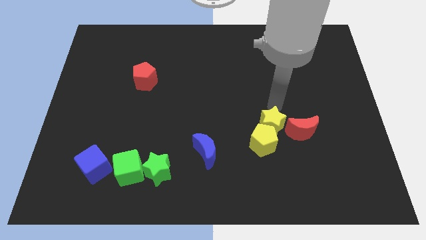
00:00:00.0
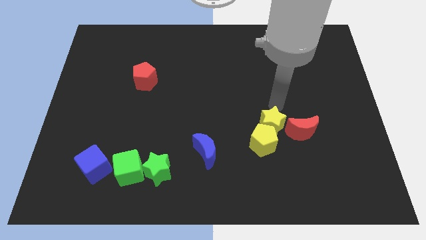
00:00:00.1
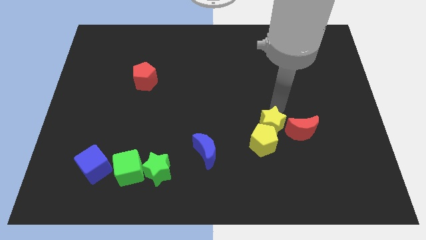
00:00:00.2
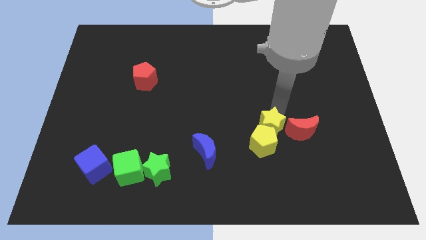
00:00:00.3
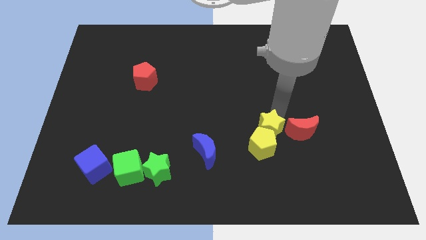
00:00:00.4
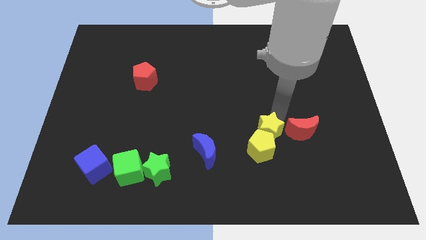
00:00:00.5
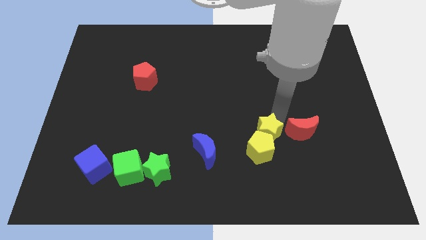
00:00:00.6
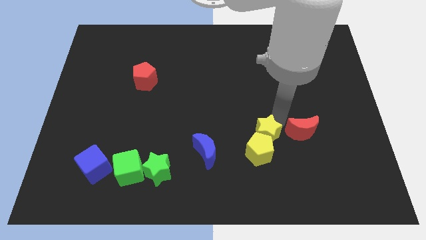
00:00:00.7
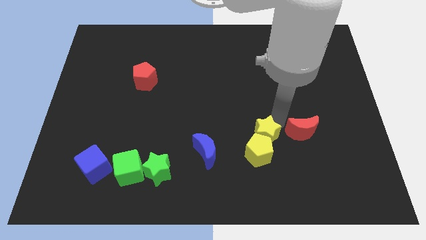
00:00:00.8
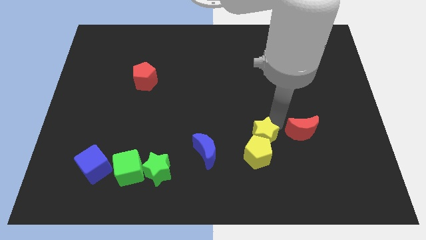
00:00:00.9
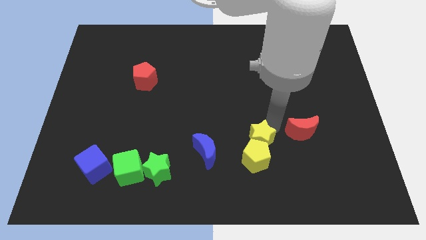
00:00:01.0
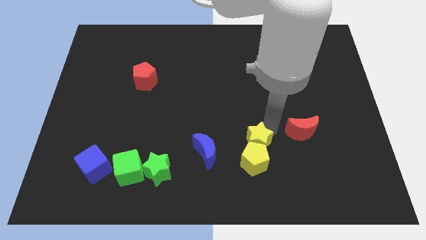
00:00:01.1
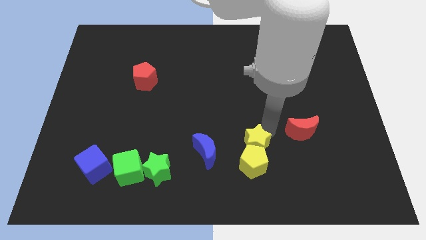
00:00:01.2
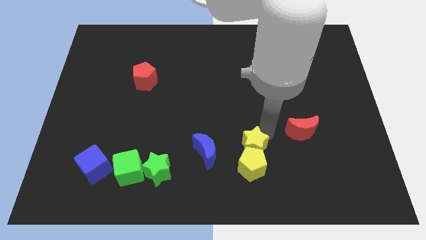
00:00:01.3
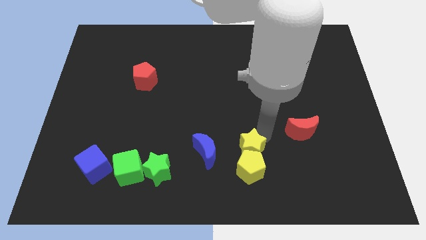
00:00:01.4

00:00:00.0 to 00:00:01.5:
move the group of yellow blocks at the right side of the blue moon

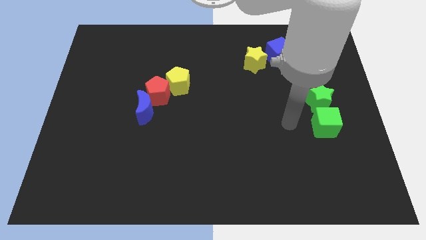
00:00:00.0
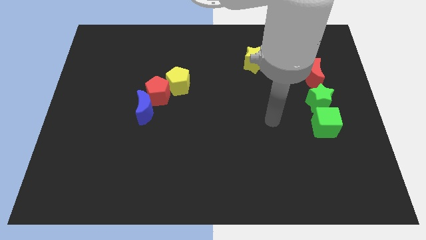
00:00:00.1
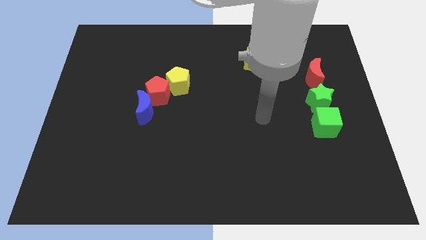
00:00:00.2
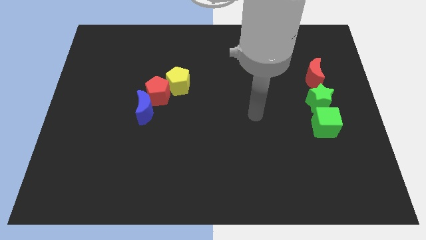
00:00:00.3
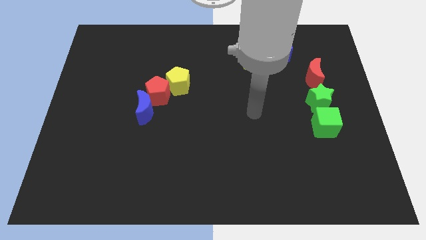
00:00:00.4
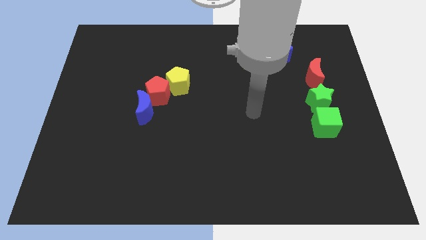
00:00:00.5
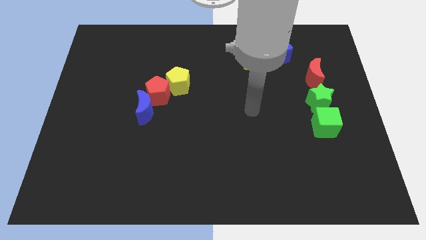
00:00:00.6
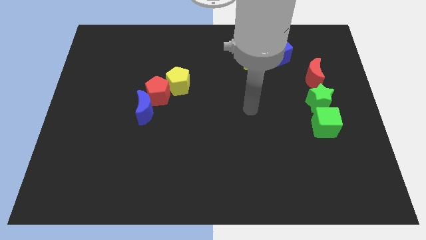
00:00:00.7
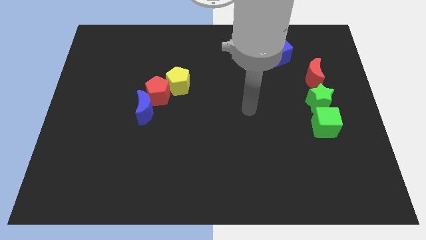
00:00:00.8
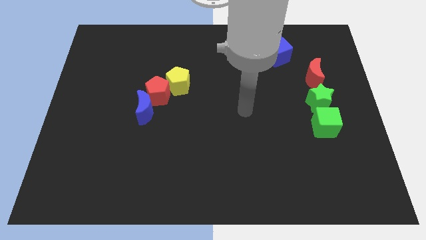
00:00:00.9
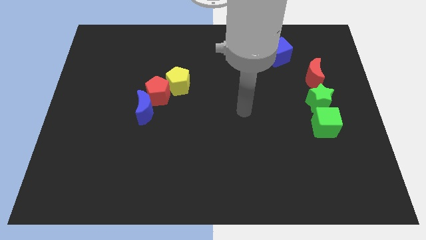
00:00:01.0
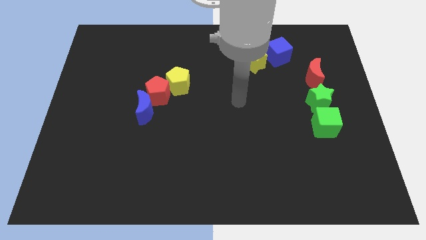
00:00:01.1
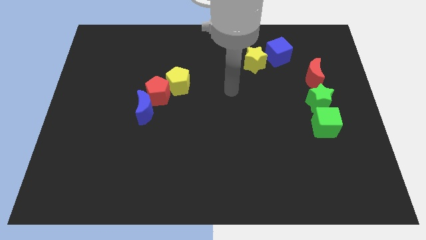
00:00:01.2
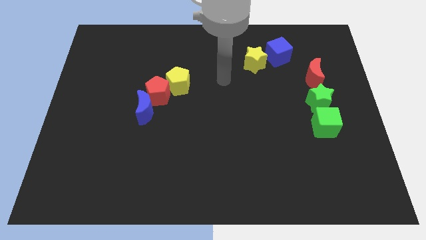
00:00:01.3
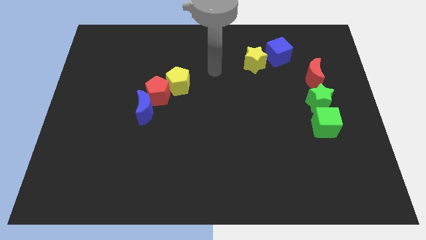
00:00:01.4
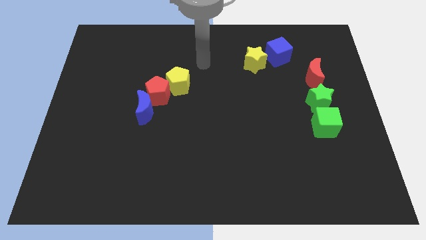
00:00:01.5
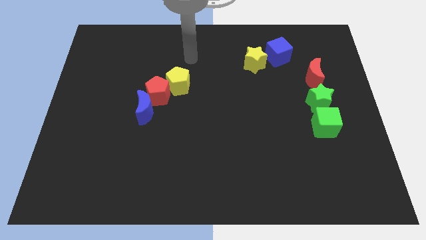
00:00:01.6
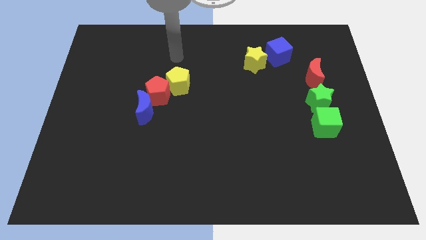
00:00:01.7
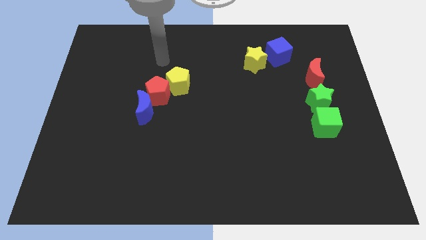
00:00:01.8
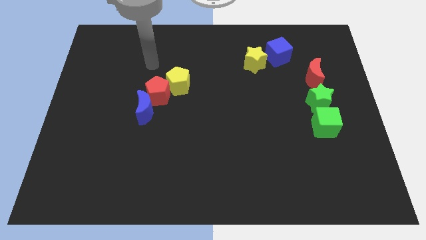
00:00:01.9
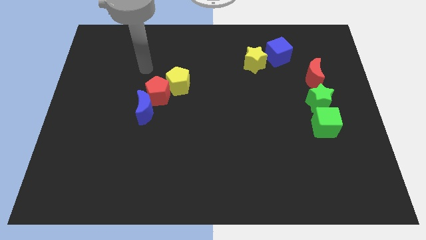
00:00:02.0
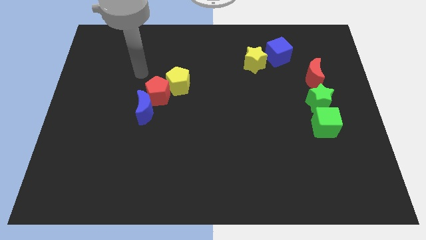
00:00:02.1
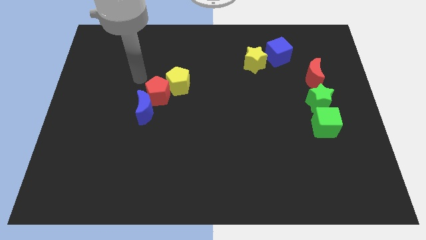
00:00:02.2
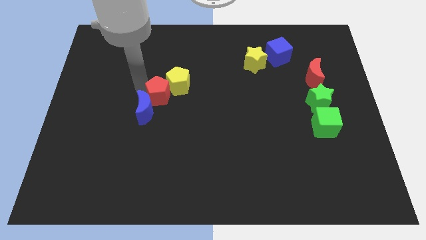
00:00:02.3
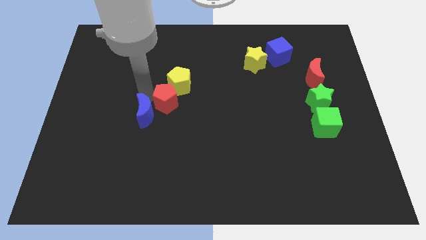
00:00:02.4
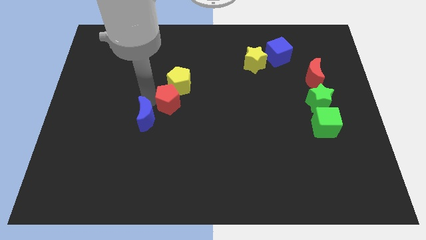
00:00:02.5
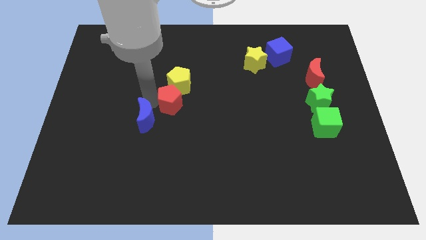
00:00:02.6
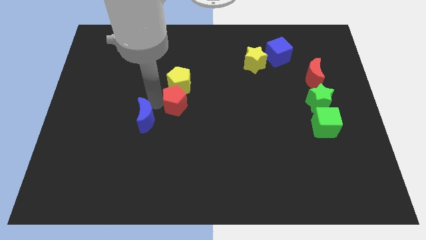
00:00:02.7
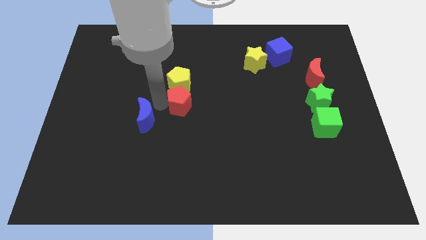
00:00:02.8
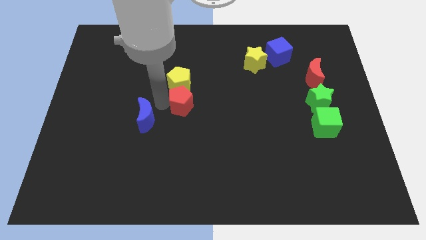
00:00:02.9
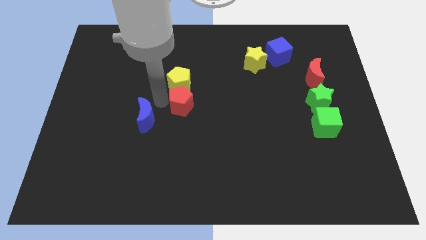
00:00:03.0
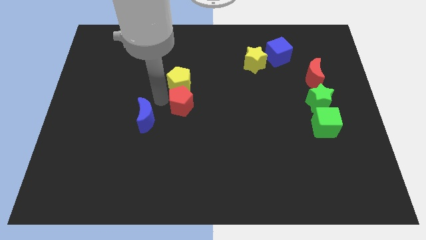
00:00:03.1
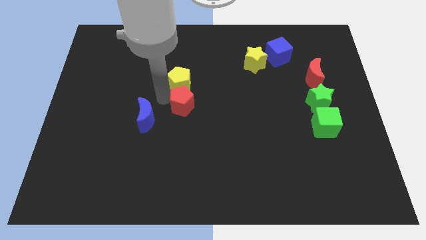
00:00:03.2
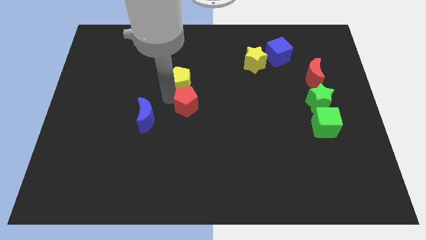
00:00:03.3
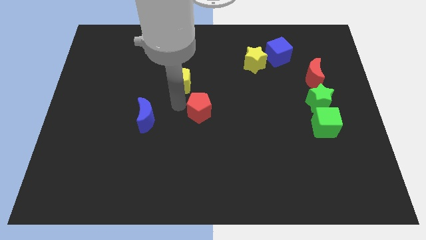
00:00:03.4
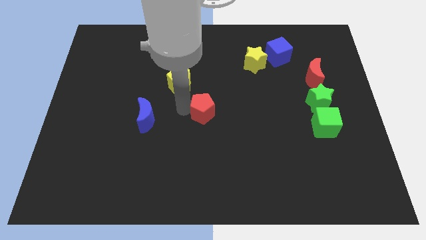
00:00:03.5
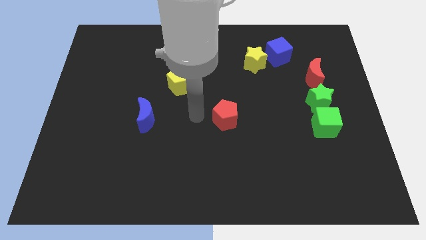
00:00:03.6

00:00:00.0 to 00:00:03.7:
separate red pentagon from yellow pentagon and blue crescent

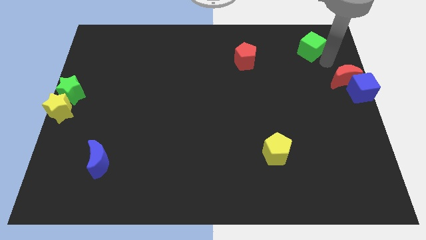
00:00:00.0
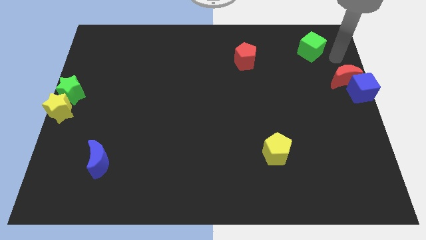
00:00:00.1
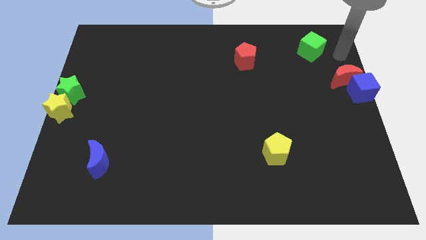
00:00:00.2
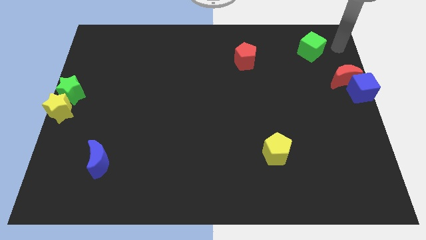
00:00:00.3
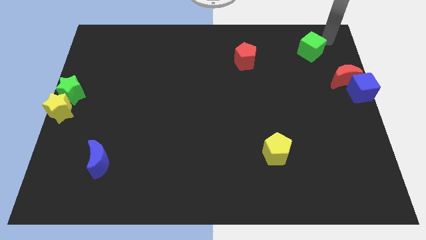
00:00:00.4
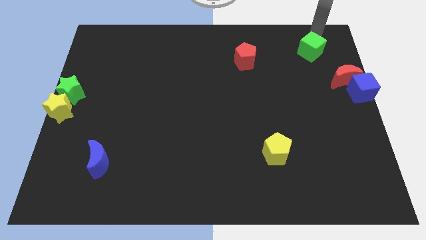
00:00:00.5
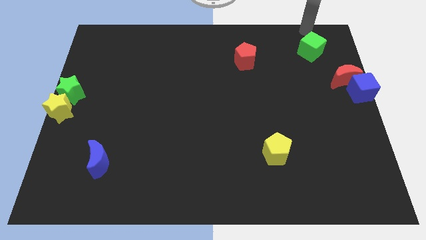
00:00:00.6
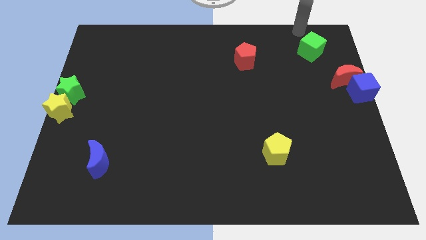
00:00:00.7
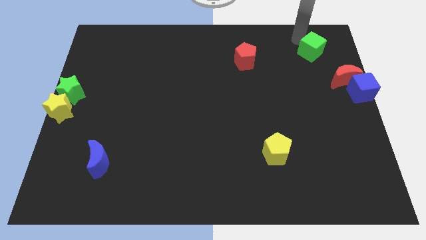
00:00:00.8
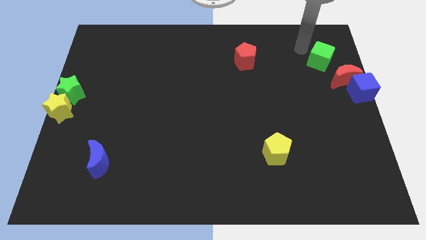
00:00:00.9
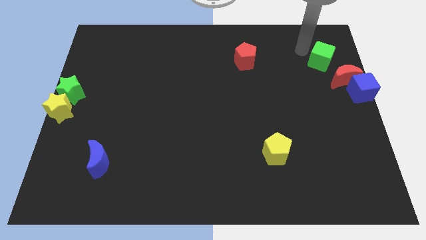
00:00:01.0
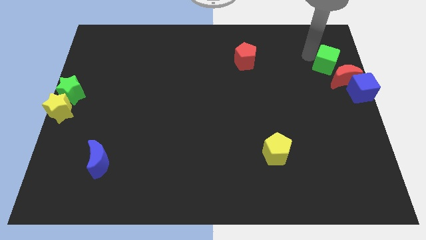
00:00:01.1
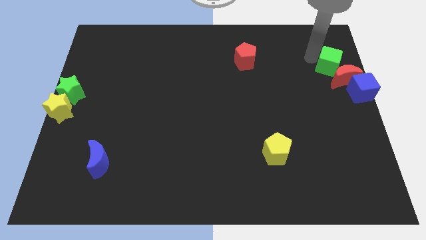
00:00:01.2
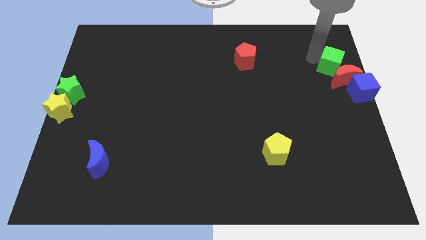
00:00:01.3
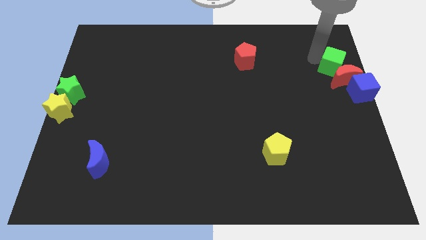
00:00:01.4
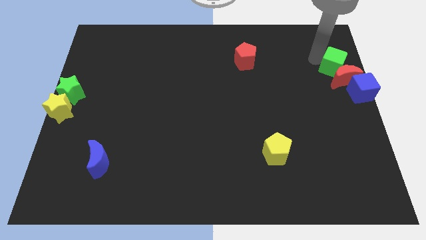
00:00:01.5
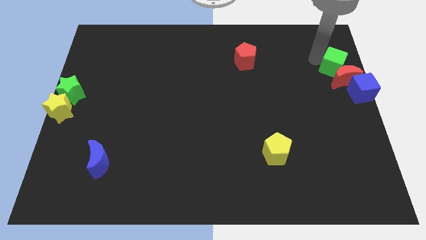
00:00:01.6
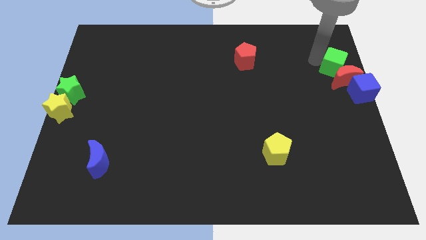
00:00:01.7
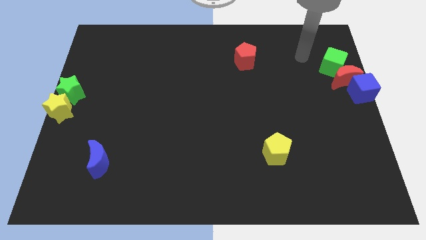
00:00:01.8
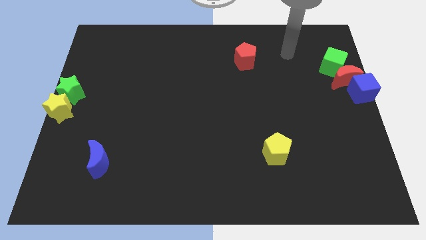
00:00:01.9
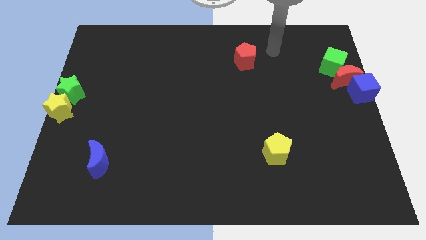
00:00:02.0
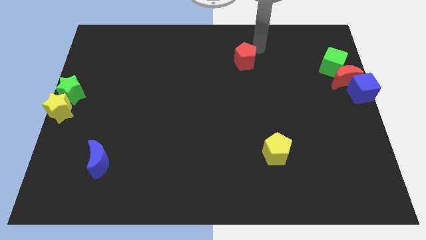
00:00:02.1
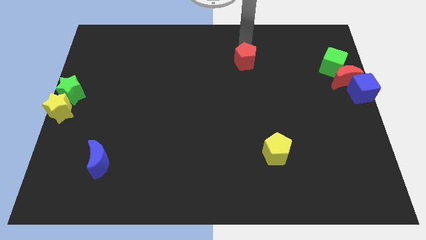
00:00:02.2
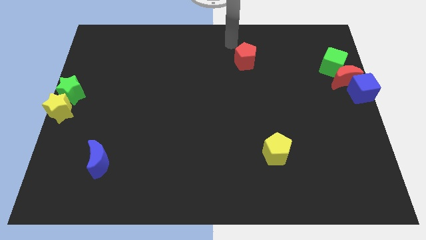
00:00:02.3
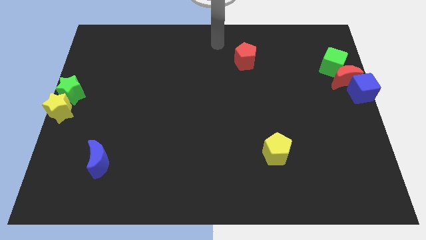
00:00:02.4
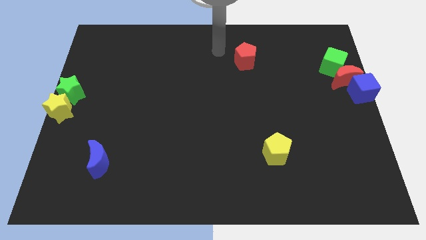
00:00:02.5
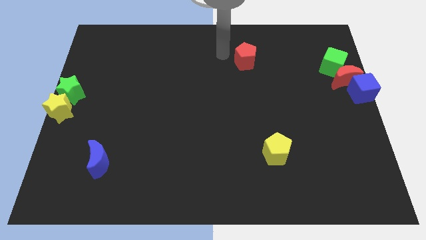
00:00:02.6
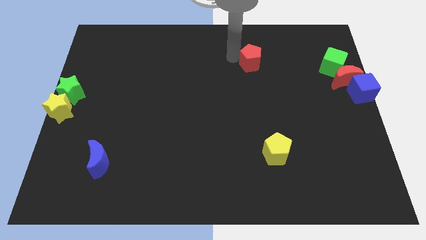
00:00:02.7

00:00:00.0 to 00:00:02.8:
move the green cube above the red moon

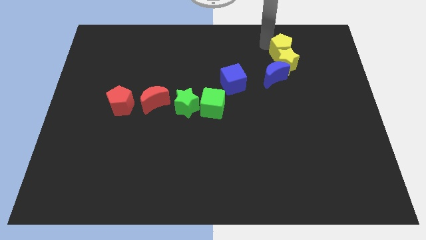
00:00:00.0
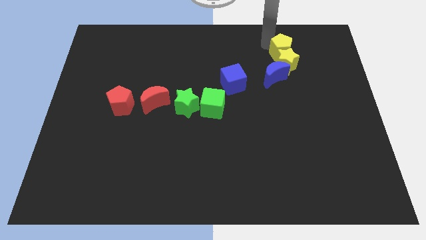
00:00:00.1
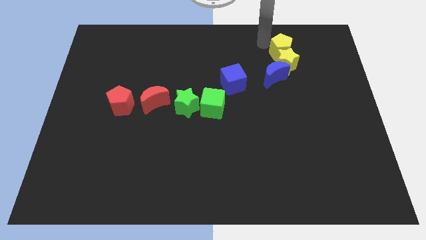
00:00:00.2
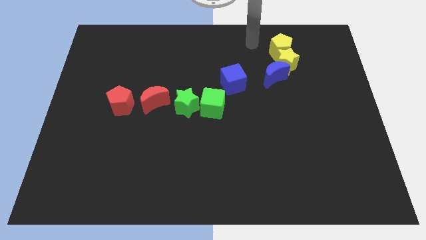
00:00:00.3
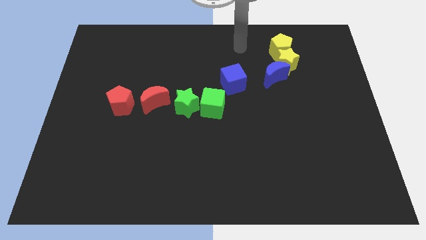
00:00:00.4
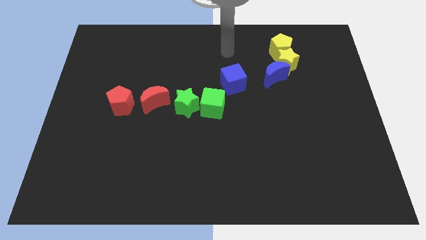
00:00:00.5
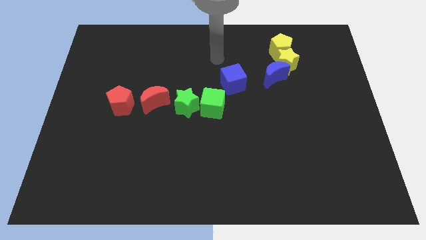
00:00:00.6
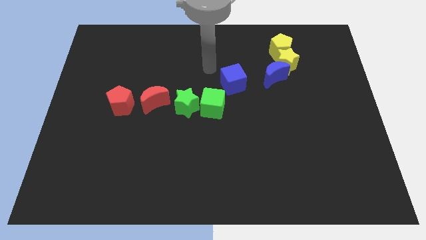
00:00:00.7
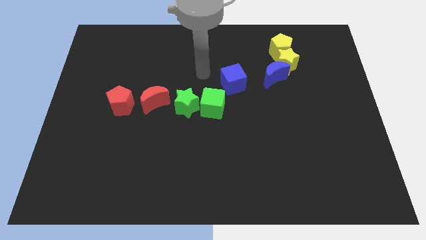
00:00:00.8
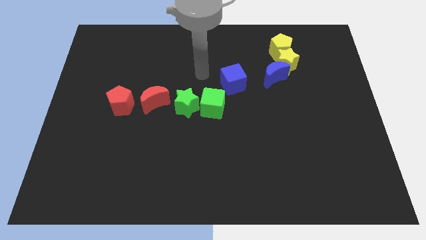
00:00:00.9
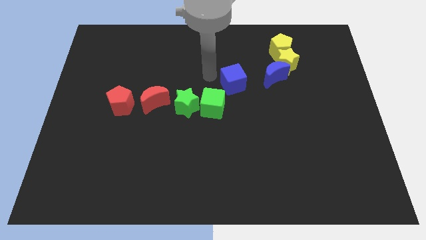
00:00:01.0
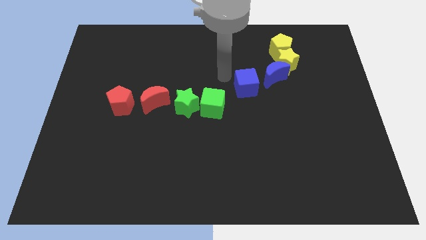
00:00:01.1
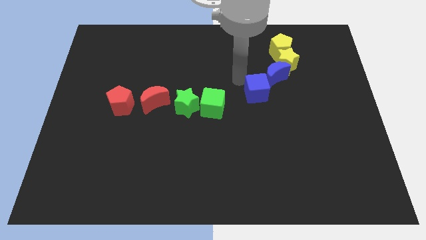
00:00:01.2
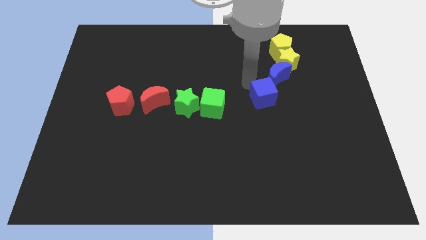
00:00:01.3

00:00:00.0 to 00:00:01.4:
move the blue cube into the blue moon
